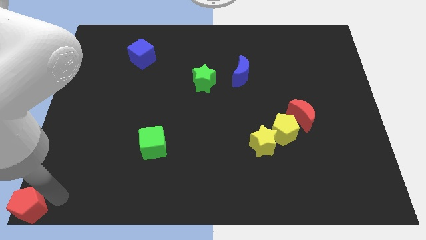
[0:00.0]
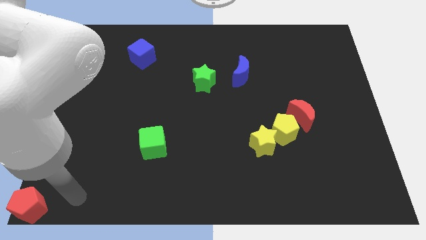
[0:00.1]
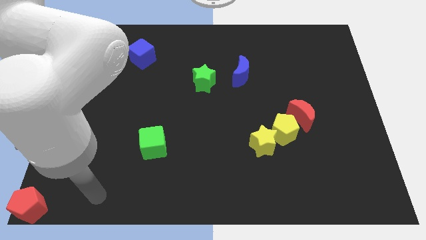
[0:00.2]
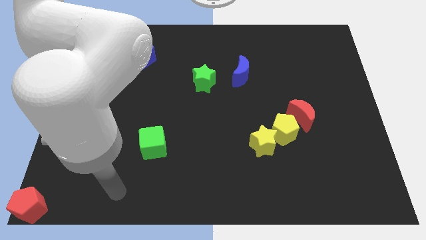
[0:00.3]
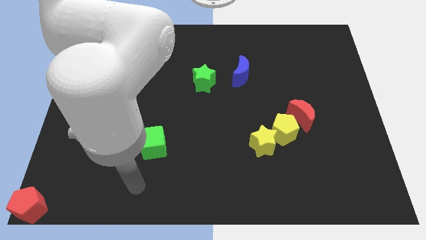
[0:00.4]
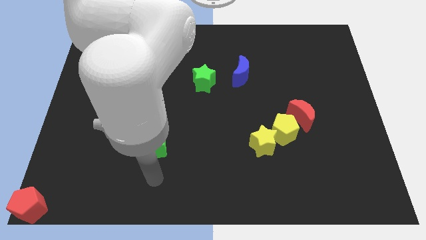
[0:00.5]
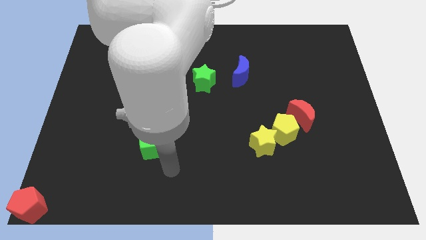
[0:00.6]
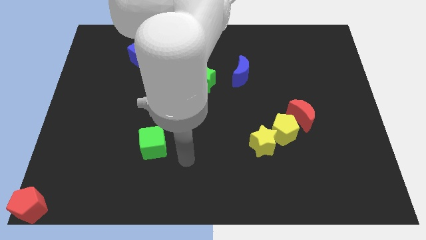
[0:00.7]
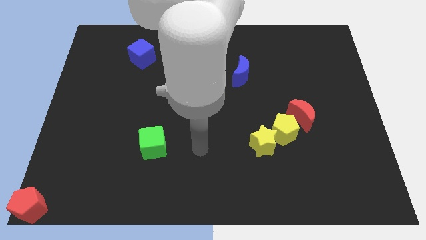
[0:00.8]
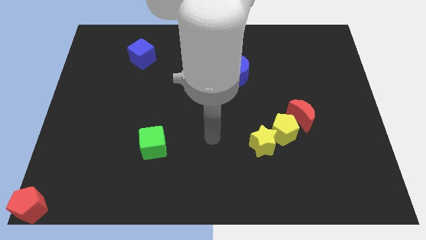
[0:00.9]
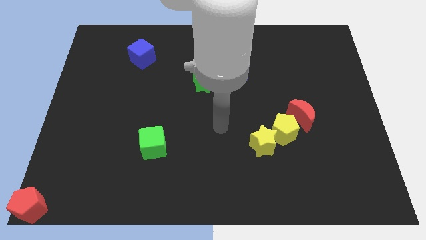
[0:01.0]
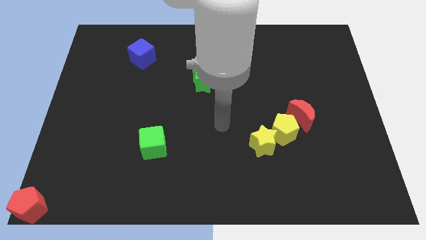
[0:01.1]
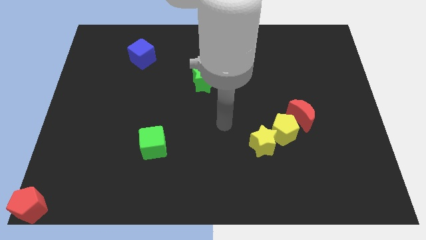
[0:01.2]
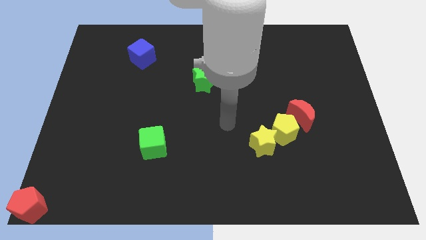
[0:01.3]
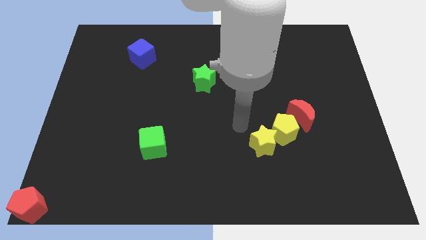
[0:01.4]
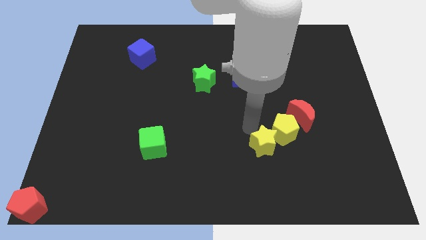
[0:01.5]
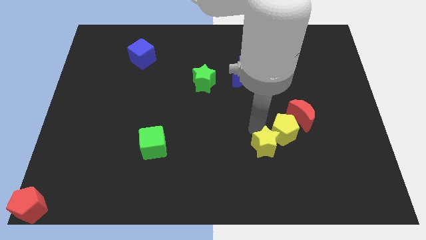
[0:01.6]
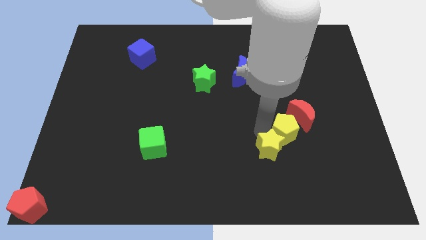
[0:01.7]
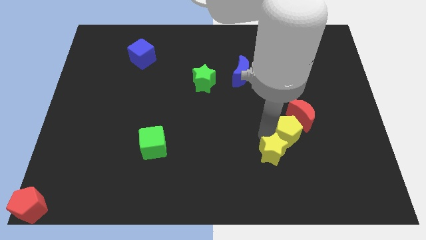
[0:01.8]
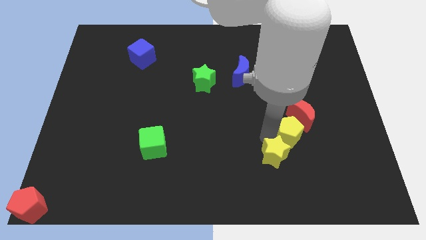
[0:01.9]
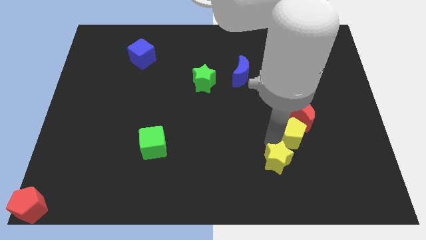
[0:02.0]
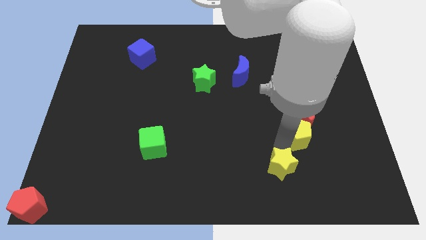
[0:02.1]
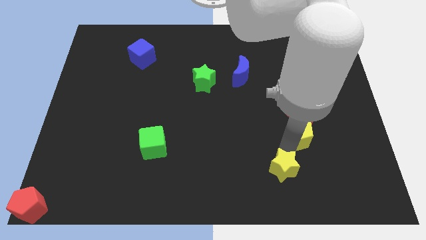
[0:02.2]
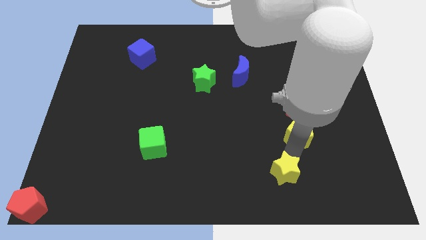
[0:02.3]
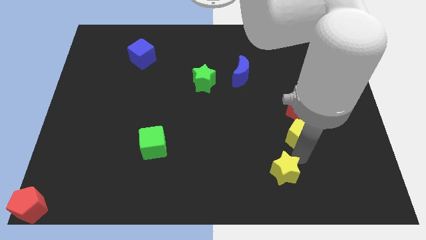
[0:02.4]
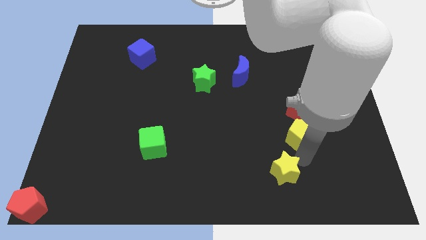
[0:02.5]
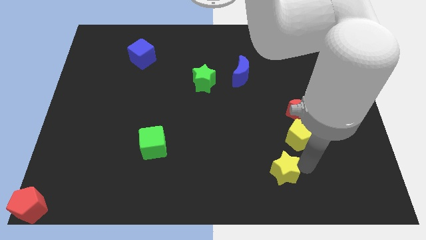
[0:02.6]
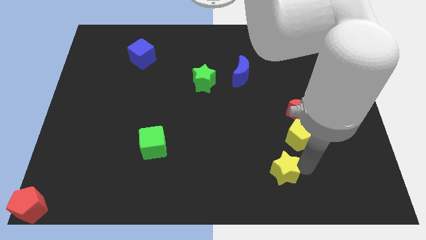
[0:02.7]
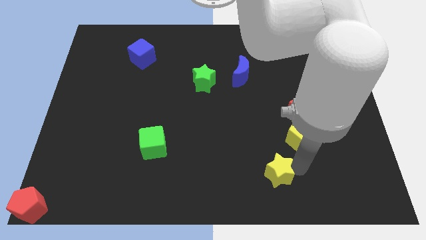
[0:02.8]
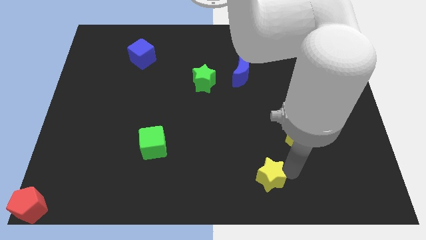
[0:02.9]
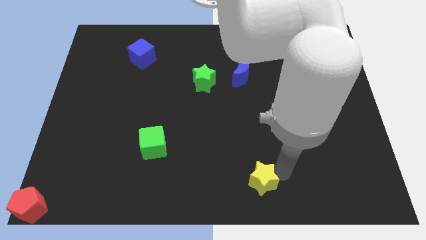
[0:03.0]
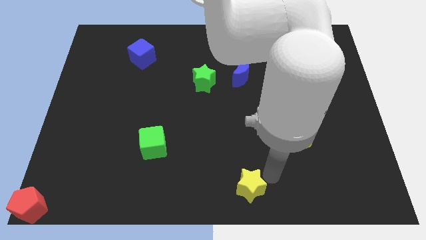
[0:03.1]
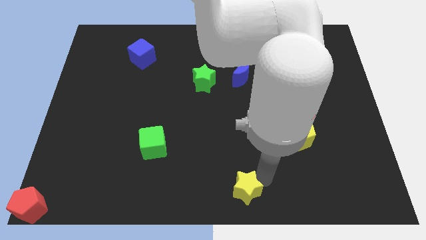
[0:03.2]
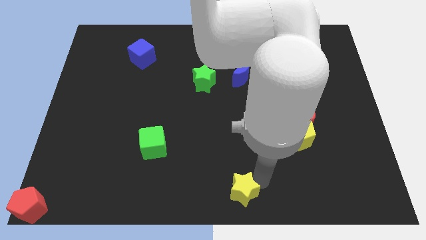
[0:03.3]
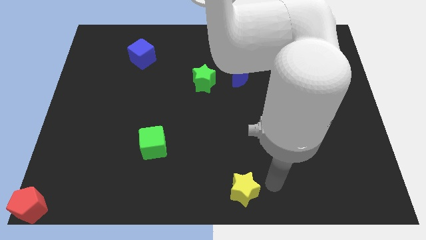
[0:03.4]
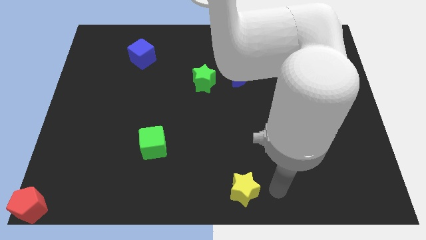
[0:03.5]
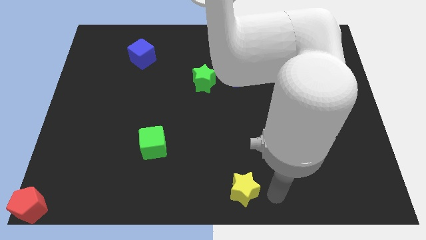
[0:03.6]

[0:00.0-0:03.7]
separate the yellow star from the yellow pentagon

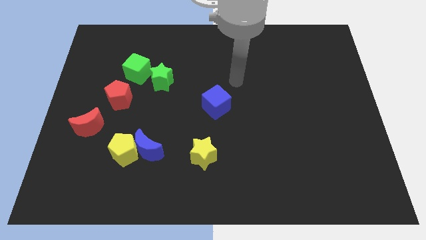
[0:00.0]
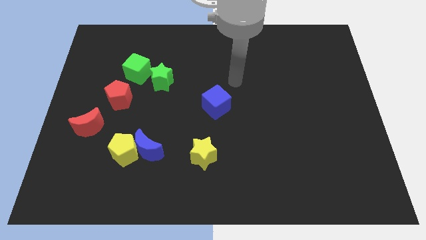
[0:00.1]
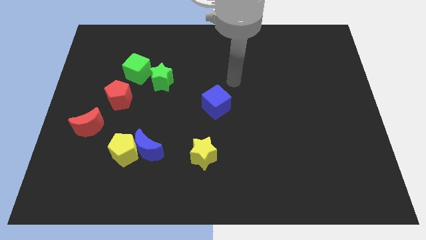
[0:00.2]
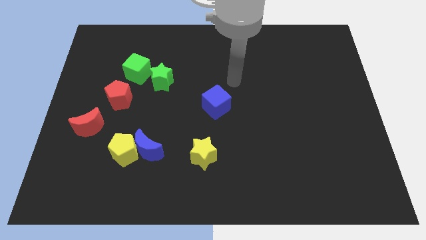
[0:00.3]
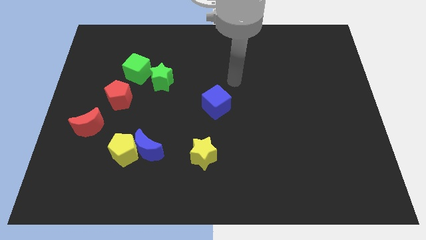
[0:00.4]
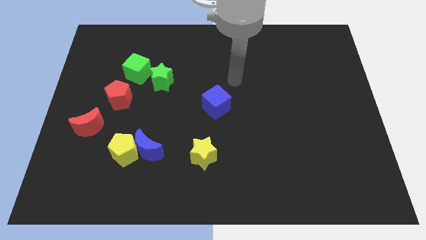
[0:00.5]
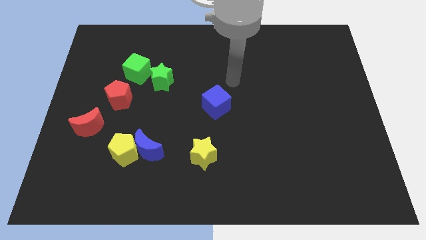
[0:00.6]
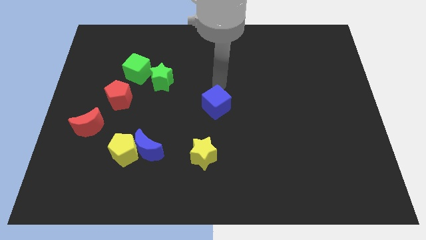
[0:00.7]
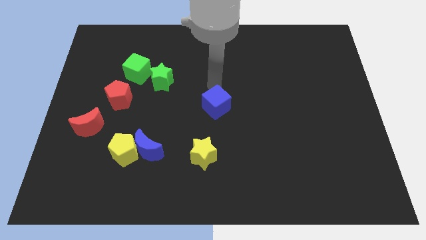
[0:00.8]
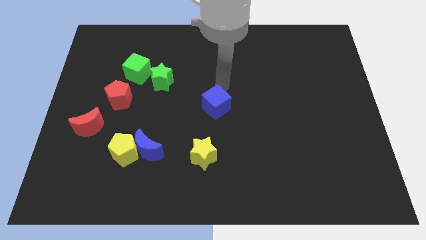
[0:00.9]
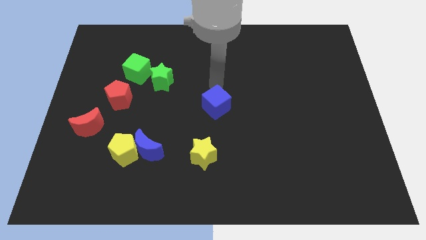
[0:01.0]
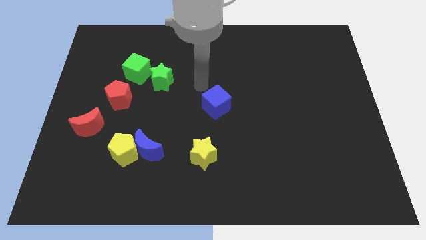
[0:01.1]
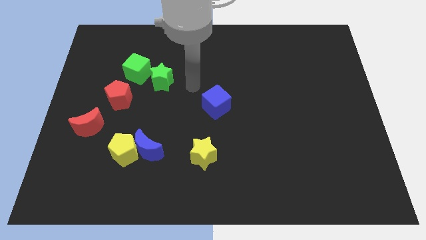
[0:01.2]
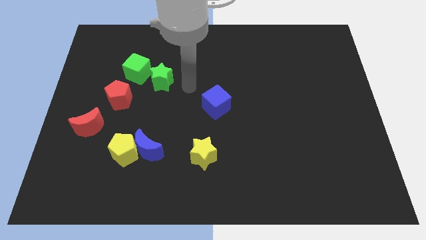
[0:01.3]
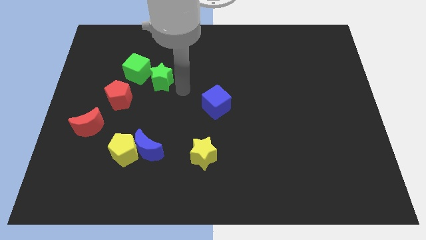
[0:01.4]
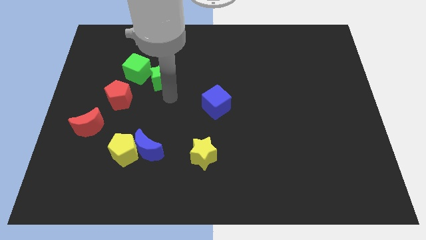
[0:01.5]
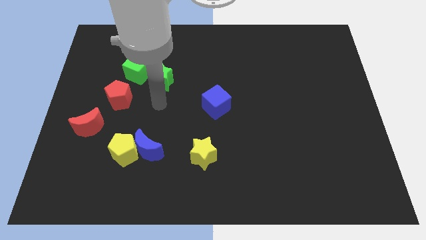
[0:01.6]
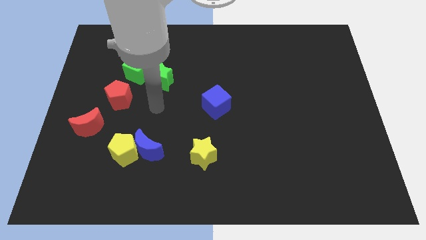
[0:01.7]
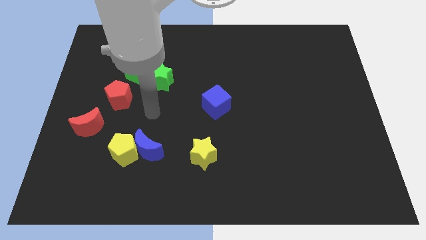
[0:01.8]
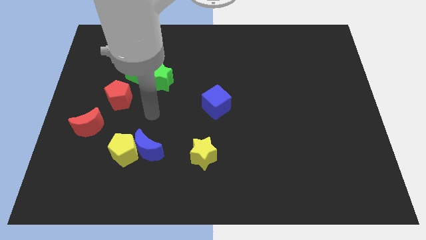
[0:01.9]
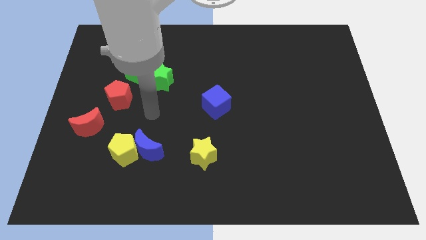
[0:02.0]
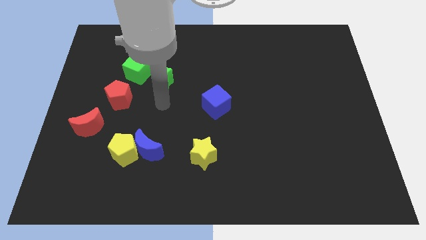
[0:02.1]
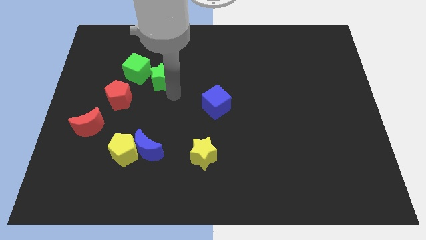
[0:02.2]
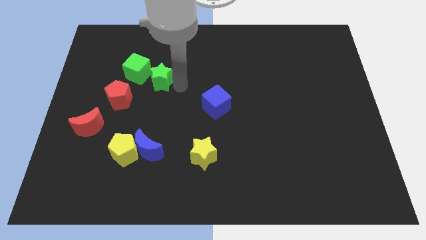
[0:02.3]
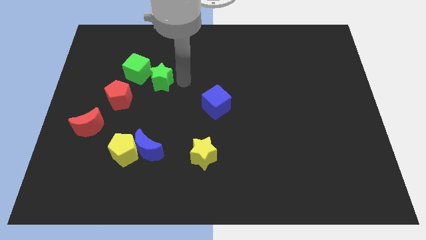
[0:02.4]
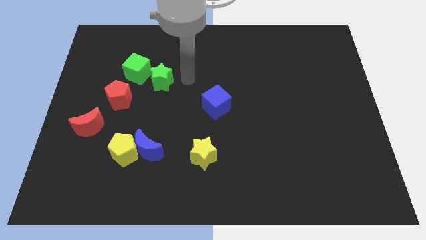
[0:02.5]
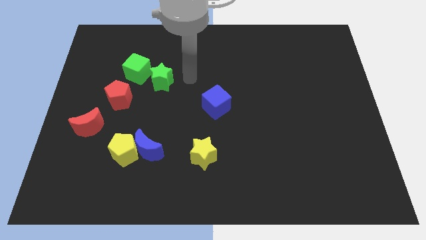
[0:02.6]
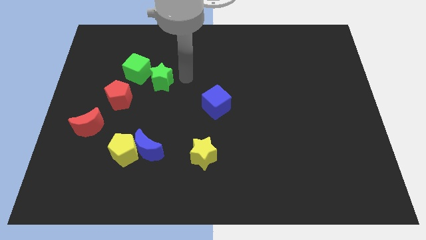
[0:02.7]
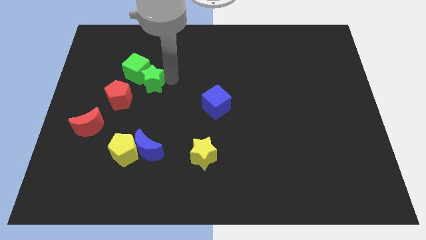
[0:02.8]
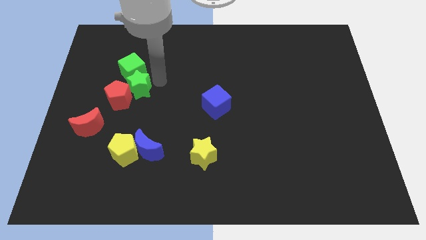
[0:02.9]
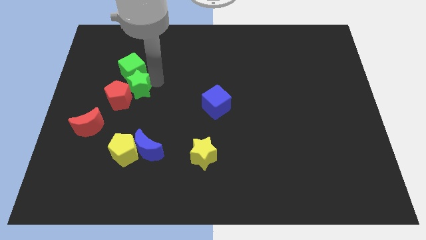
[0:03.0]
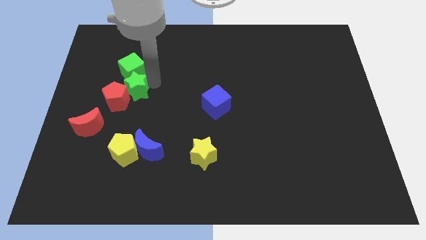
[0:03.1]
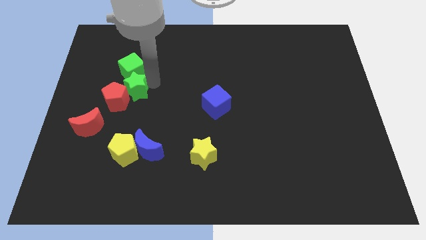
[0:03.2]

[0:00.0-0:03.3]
place green star to the bottom of green cube

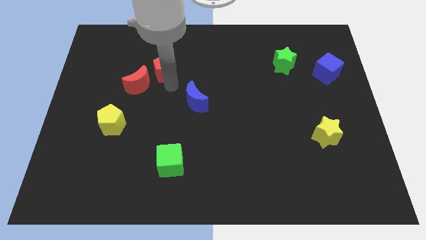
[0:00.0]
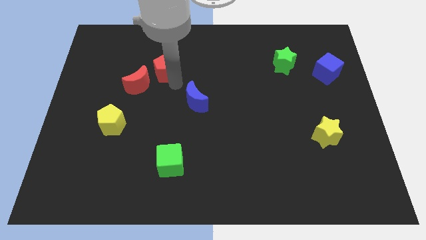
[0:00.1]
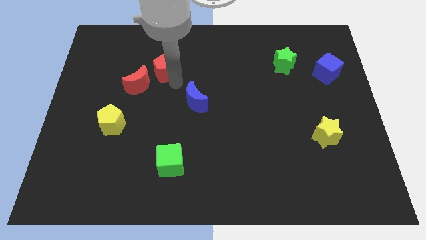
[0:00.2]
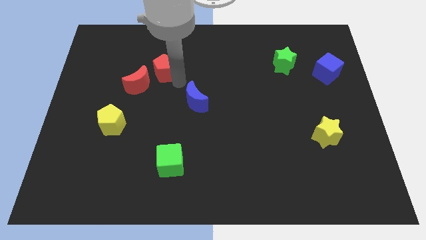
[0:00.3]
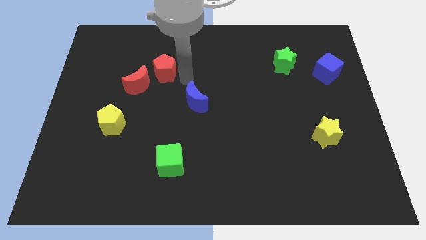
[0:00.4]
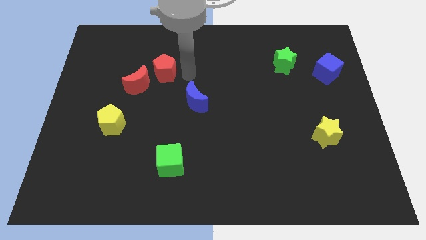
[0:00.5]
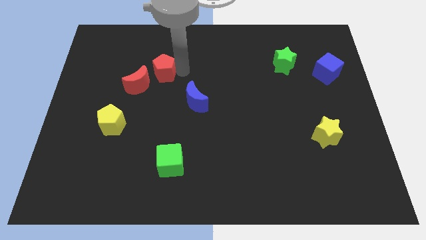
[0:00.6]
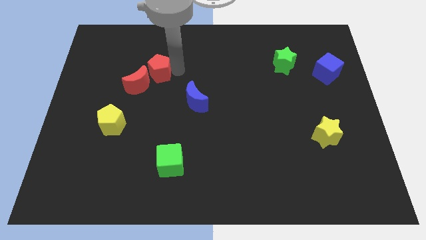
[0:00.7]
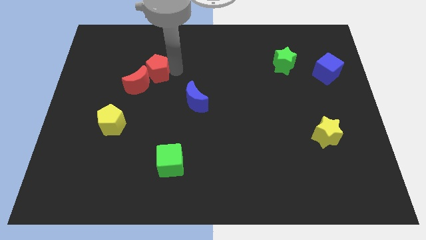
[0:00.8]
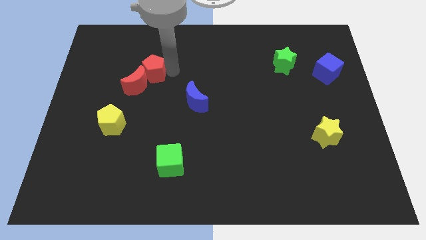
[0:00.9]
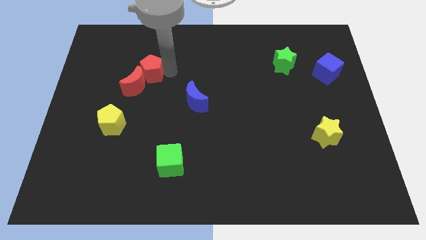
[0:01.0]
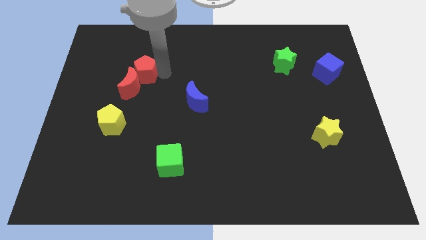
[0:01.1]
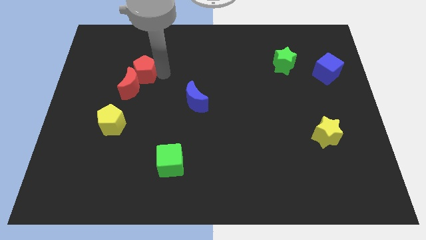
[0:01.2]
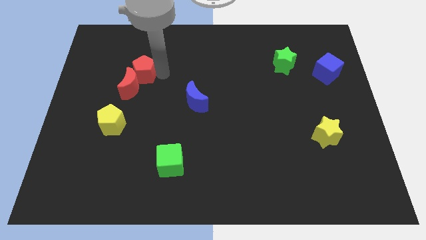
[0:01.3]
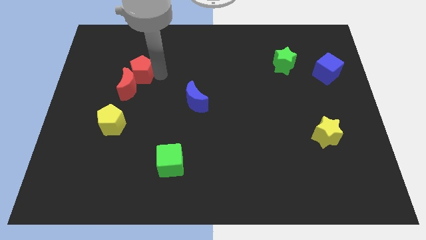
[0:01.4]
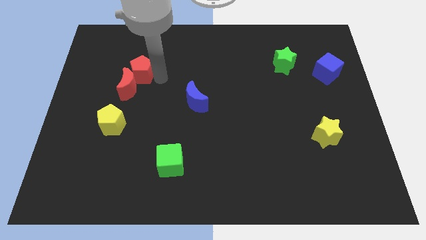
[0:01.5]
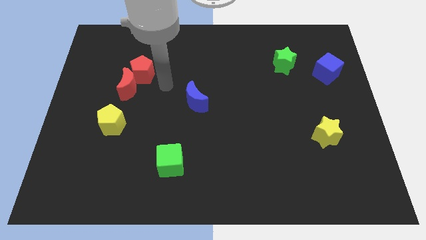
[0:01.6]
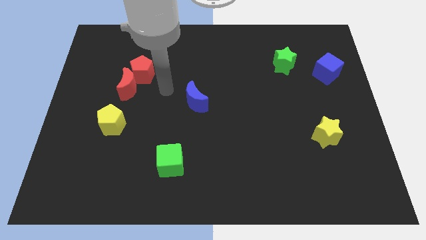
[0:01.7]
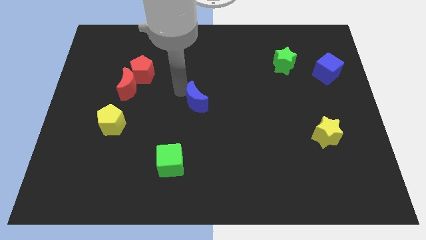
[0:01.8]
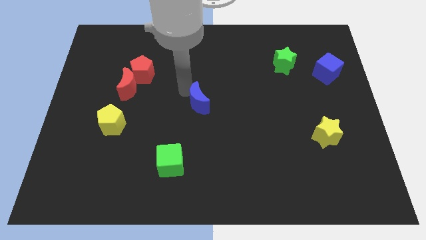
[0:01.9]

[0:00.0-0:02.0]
place the red pentagon to the top right of the red moon
